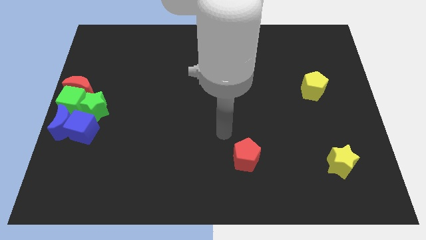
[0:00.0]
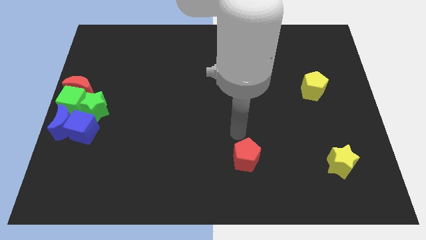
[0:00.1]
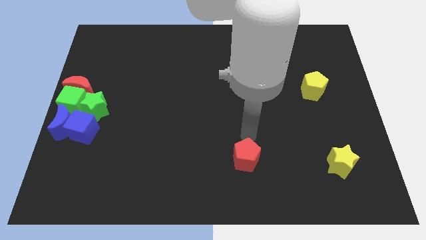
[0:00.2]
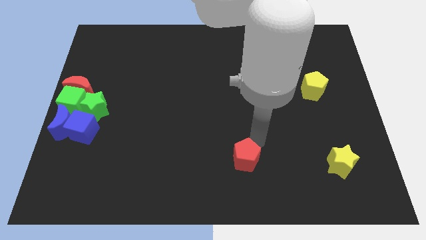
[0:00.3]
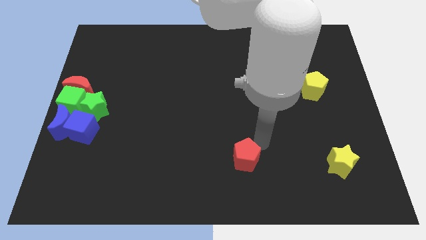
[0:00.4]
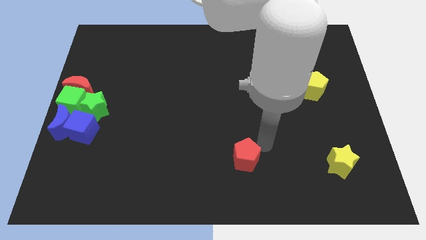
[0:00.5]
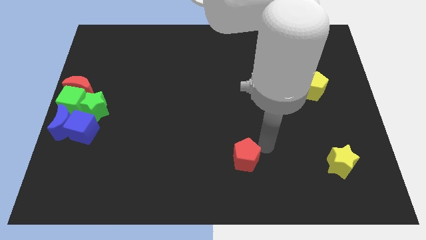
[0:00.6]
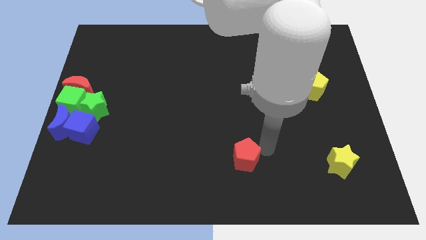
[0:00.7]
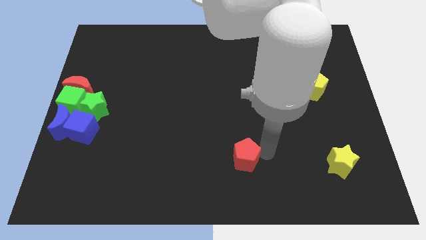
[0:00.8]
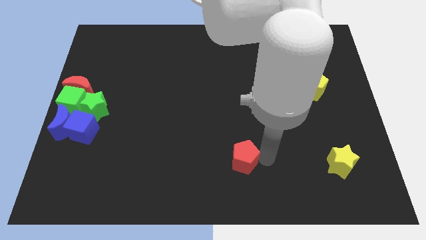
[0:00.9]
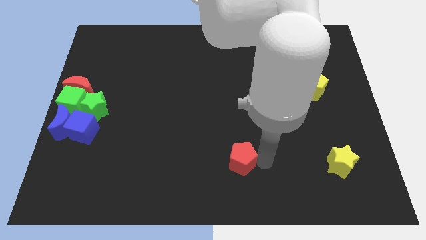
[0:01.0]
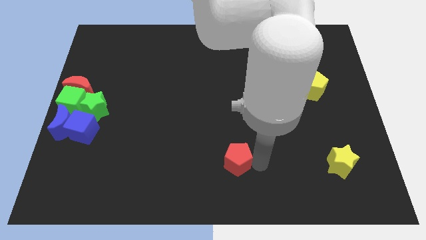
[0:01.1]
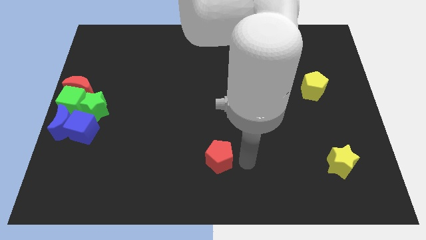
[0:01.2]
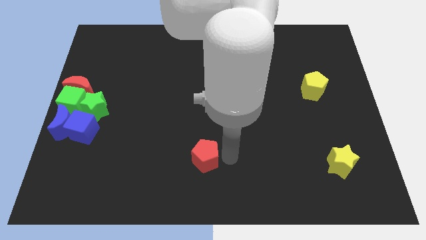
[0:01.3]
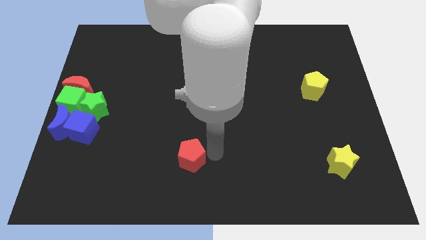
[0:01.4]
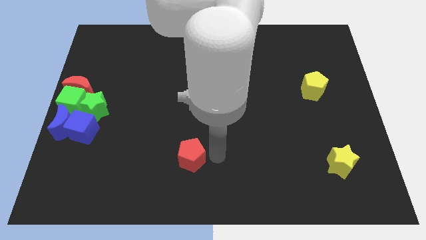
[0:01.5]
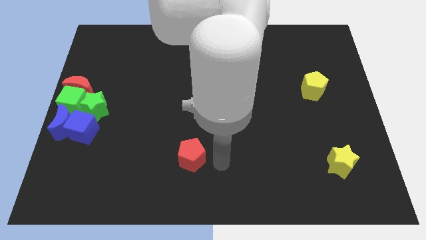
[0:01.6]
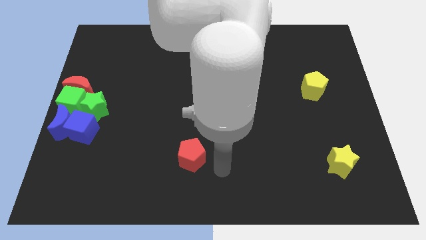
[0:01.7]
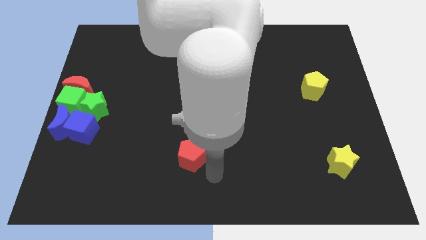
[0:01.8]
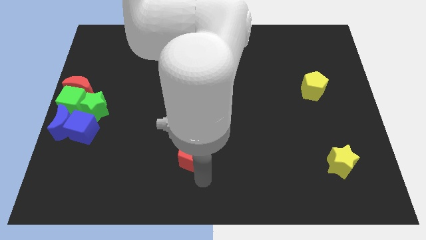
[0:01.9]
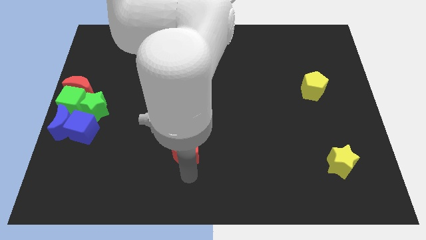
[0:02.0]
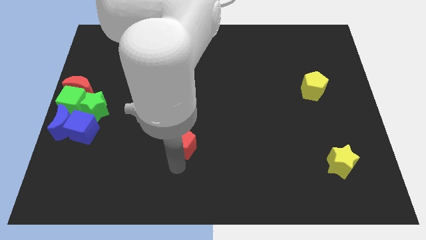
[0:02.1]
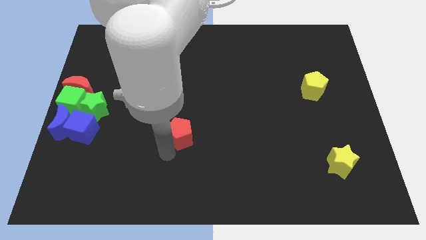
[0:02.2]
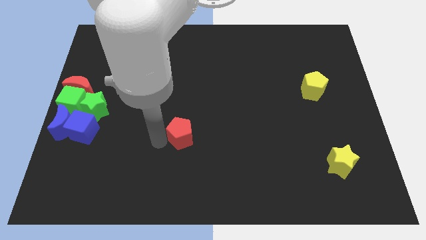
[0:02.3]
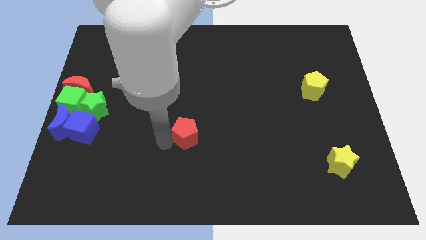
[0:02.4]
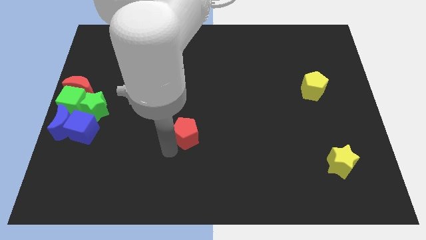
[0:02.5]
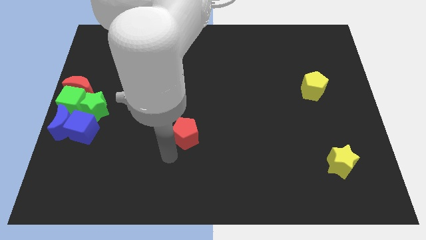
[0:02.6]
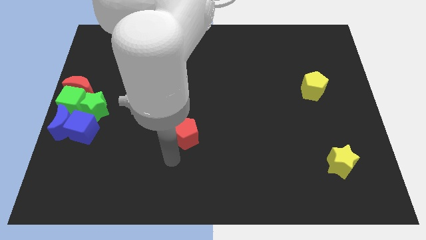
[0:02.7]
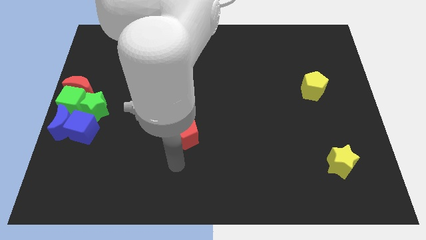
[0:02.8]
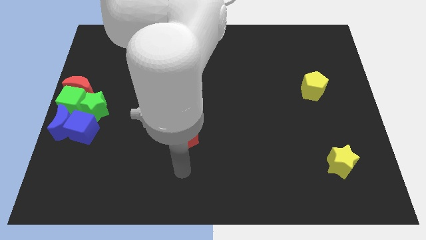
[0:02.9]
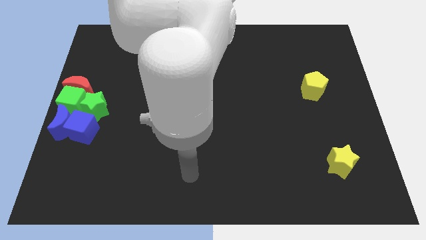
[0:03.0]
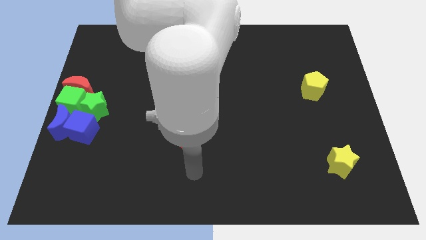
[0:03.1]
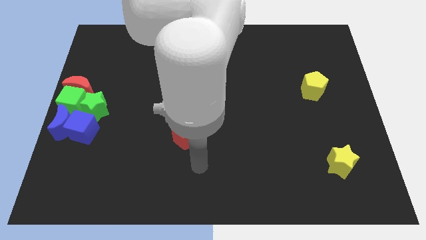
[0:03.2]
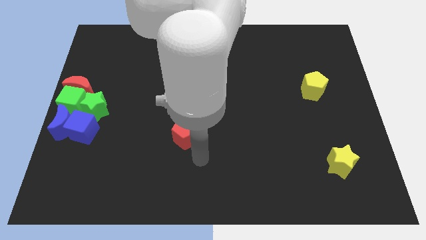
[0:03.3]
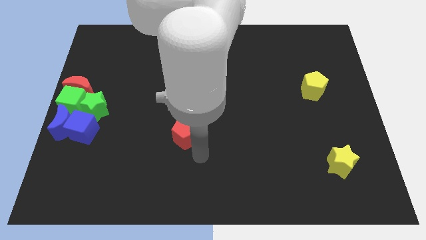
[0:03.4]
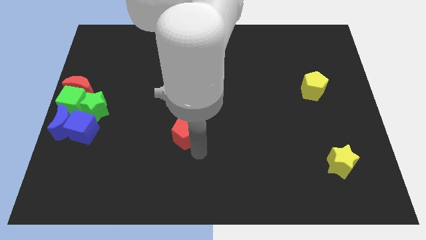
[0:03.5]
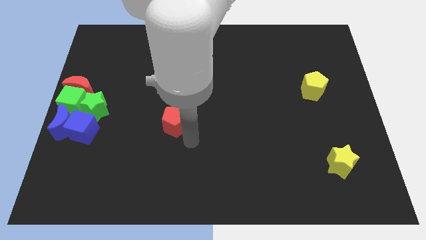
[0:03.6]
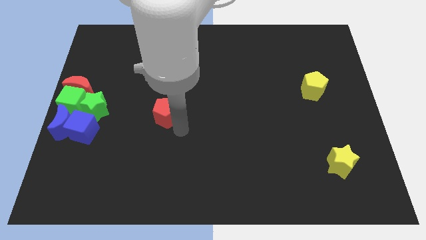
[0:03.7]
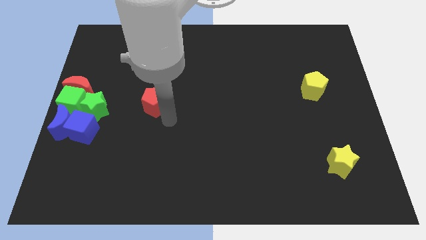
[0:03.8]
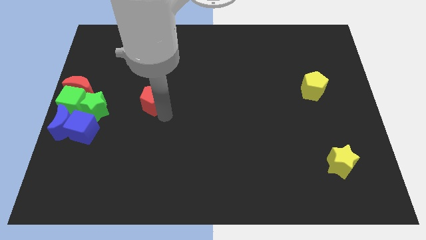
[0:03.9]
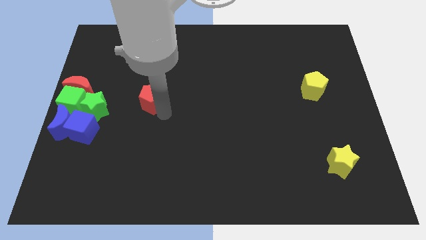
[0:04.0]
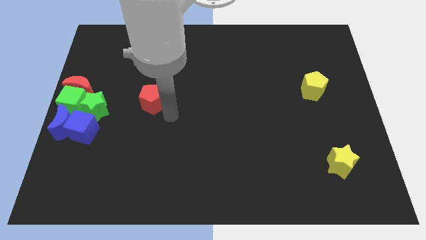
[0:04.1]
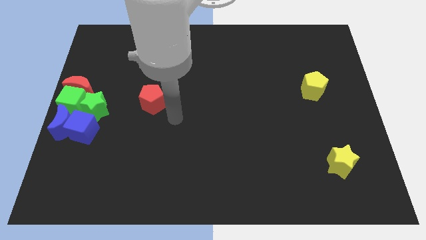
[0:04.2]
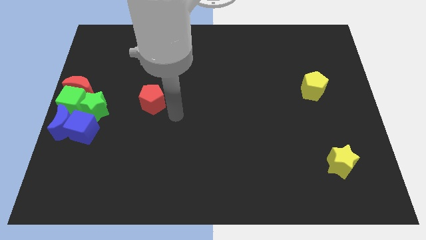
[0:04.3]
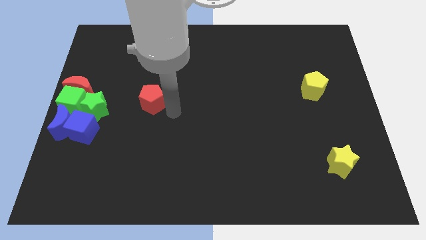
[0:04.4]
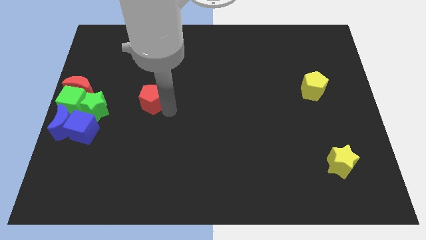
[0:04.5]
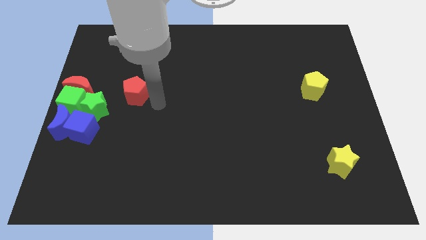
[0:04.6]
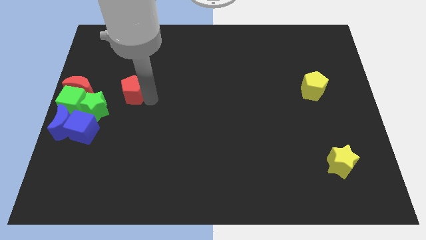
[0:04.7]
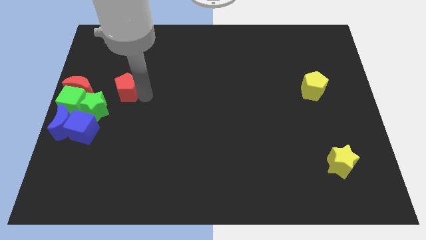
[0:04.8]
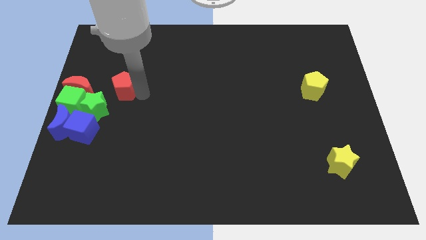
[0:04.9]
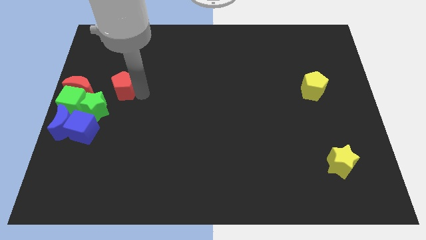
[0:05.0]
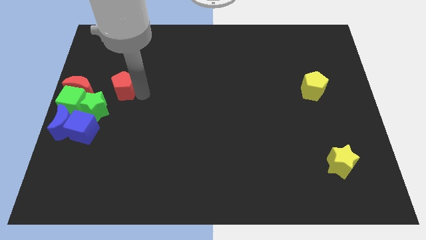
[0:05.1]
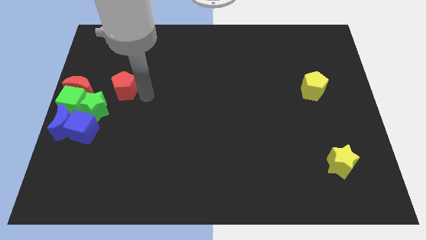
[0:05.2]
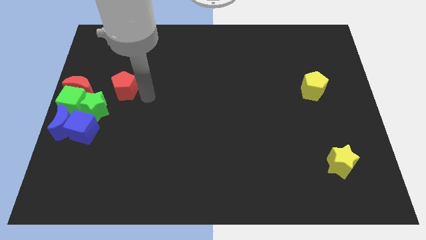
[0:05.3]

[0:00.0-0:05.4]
move the red pentagon diagonally to the top right of the green star

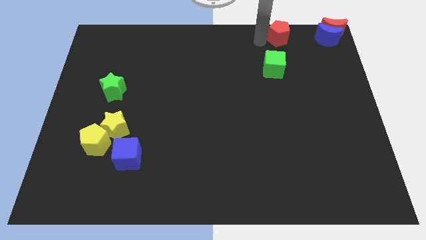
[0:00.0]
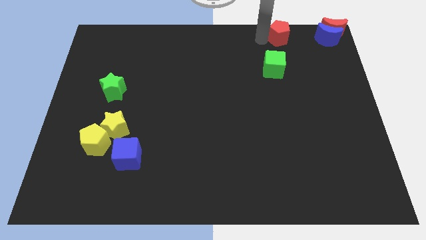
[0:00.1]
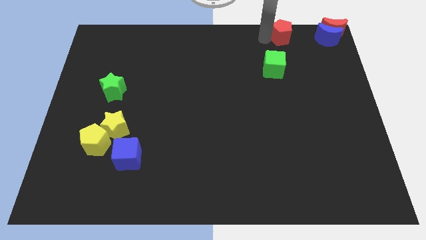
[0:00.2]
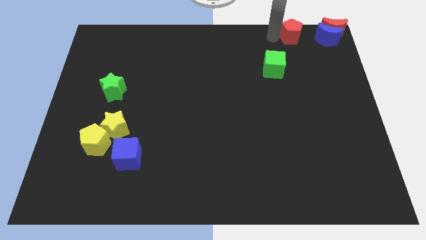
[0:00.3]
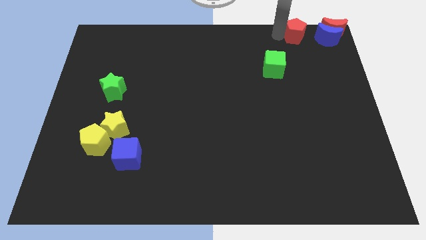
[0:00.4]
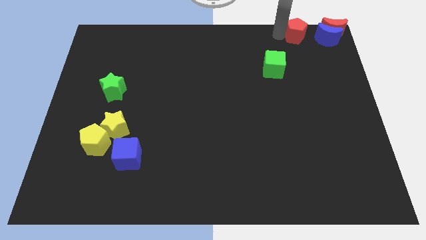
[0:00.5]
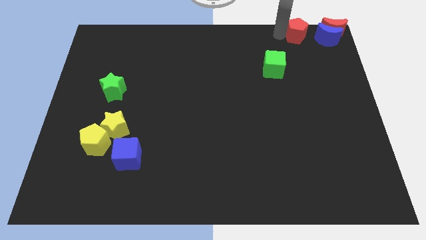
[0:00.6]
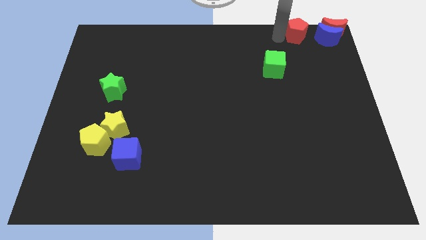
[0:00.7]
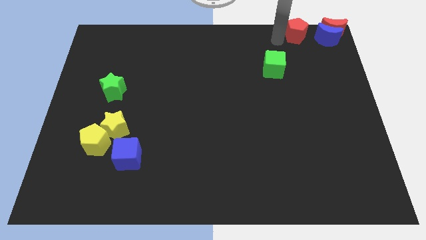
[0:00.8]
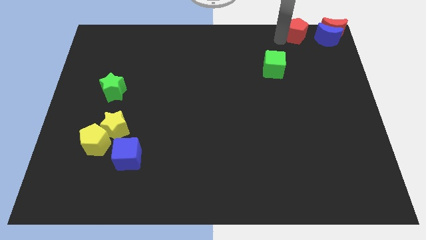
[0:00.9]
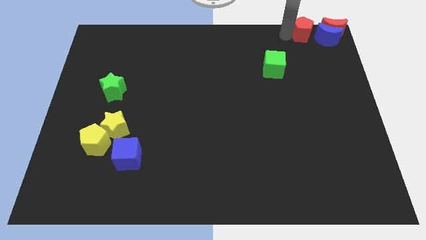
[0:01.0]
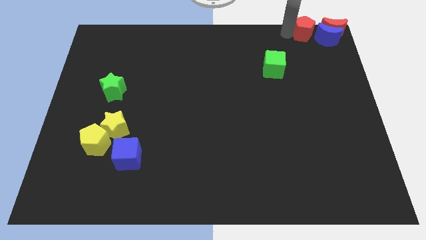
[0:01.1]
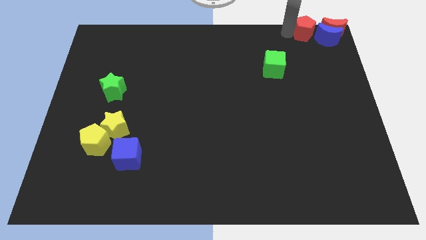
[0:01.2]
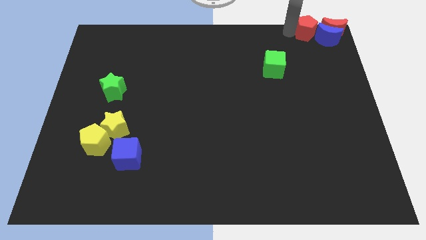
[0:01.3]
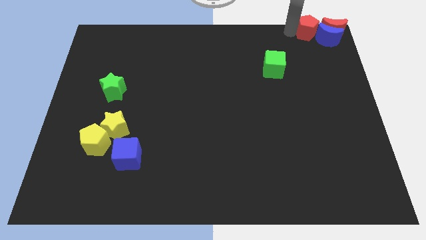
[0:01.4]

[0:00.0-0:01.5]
move the red pentagon close to the red and blue crescent

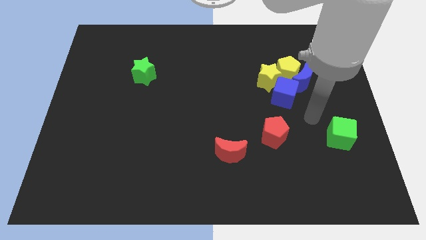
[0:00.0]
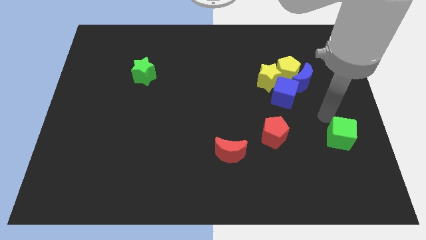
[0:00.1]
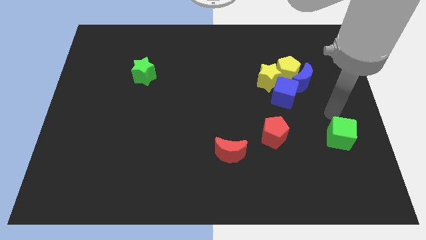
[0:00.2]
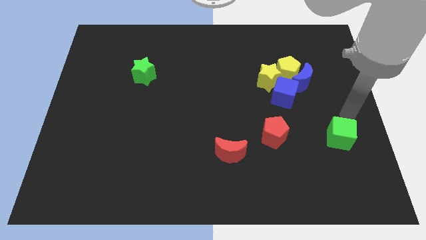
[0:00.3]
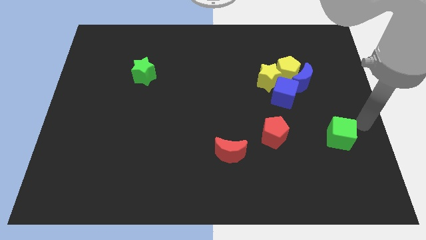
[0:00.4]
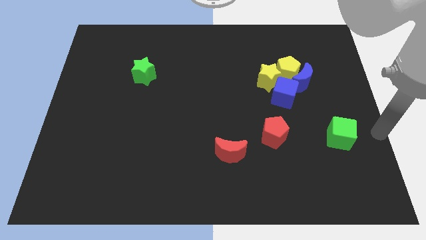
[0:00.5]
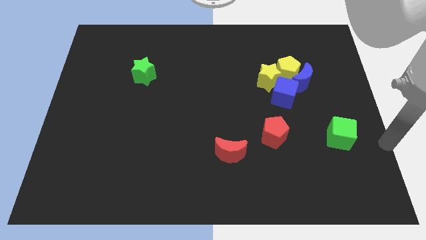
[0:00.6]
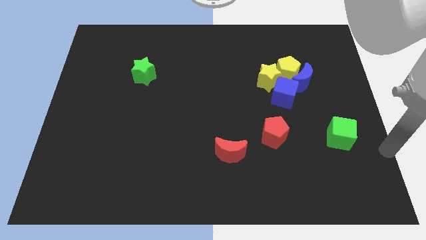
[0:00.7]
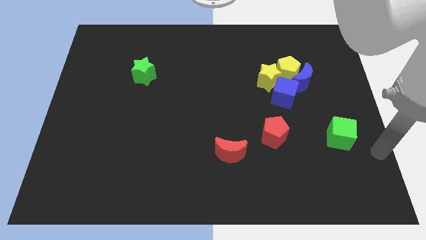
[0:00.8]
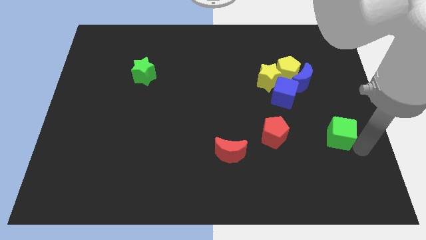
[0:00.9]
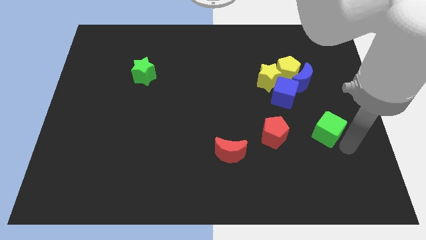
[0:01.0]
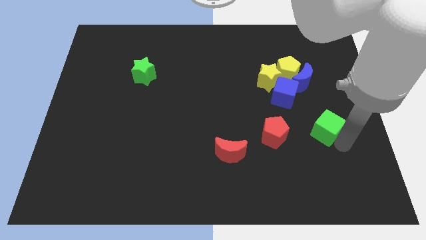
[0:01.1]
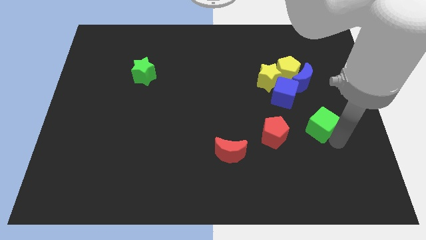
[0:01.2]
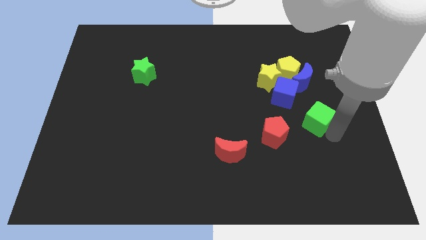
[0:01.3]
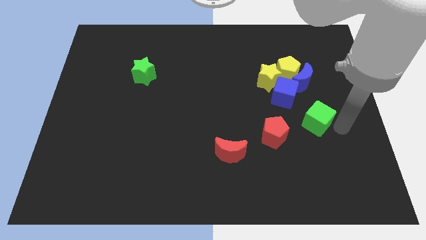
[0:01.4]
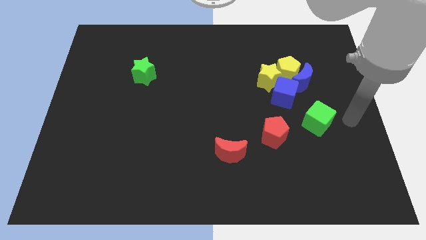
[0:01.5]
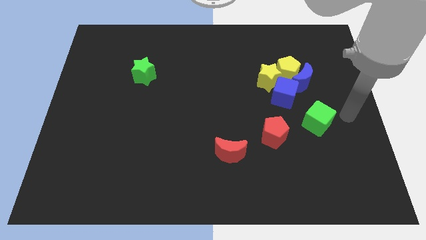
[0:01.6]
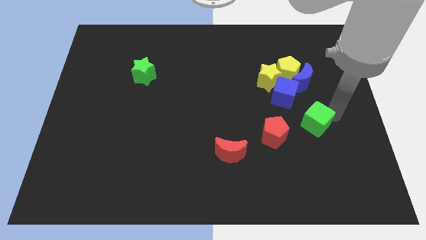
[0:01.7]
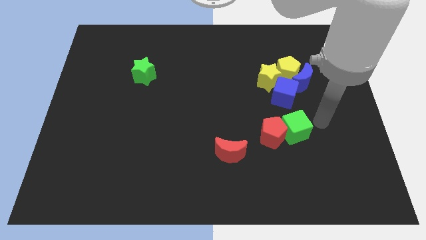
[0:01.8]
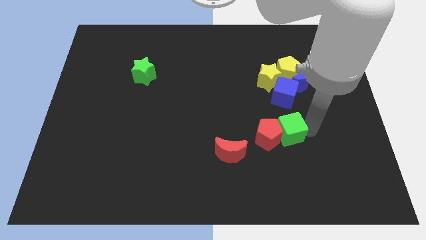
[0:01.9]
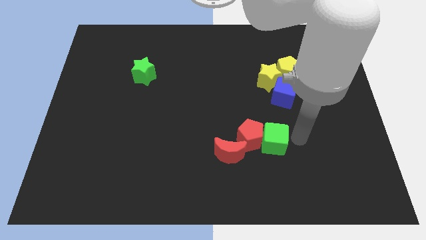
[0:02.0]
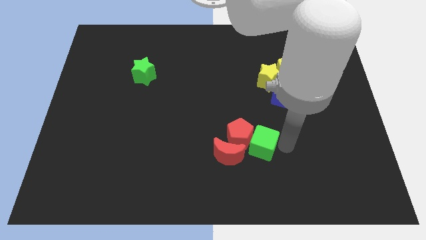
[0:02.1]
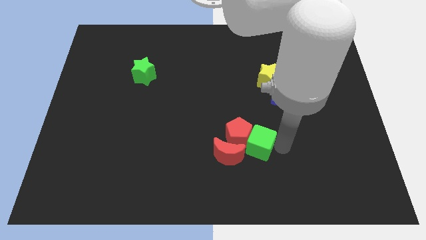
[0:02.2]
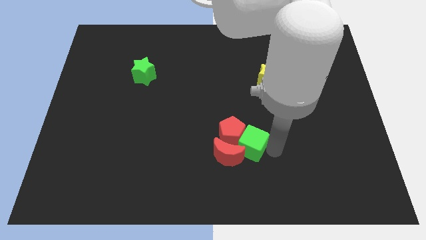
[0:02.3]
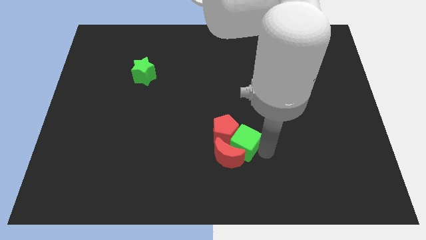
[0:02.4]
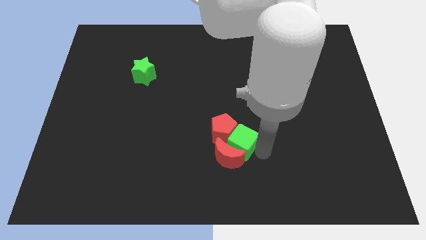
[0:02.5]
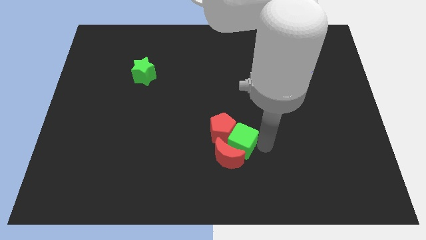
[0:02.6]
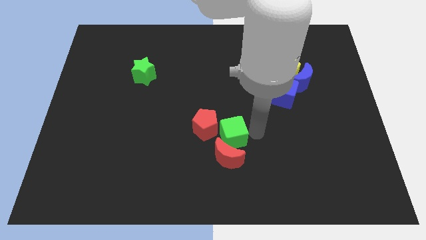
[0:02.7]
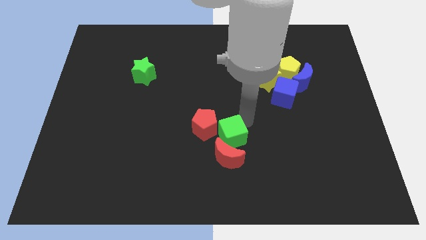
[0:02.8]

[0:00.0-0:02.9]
push the green cube and red pentagon towards the center
